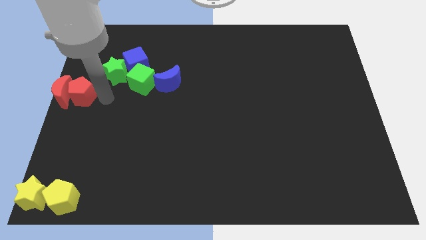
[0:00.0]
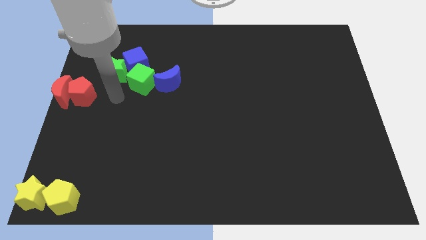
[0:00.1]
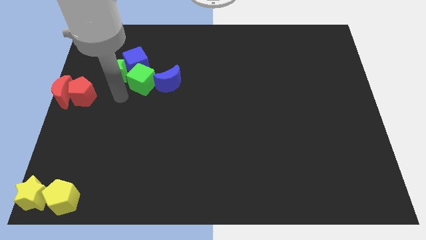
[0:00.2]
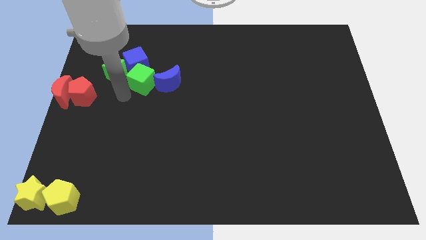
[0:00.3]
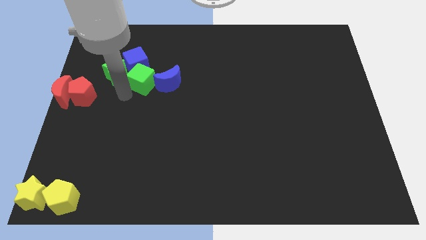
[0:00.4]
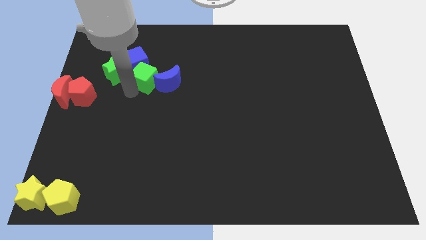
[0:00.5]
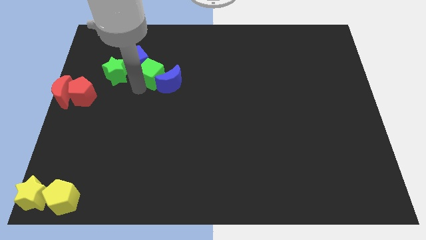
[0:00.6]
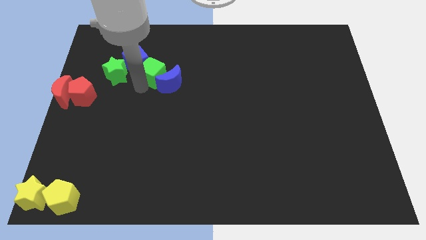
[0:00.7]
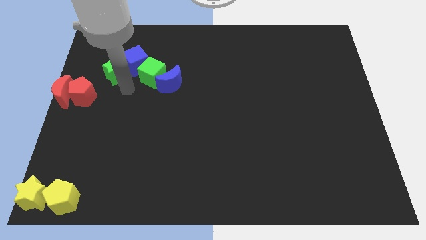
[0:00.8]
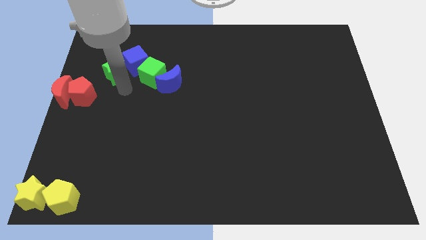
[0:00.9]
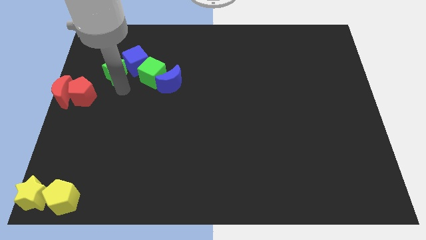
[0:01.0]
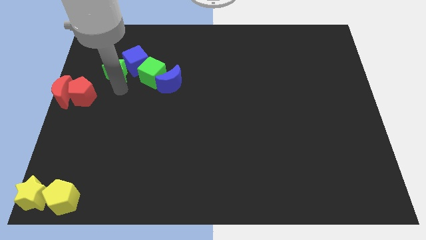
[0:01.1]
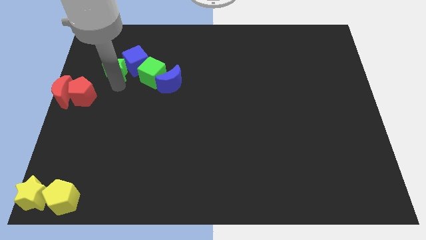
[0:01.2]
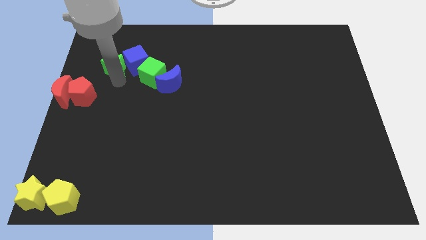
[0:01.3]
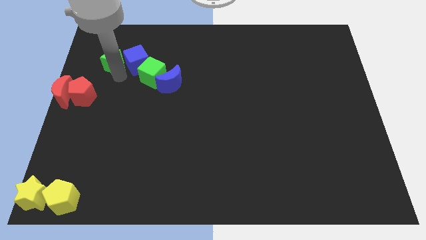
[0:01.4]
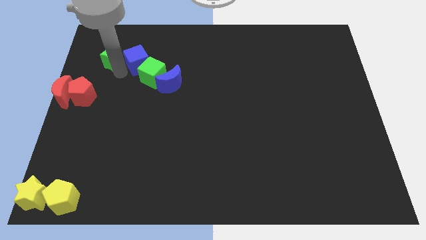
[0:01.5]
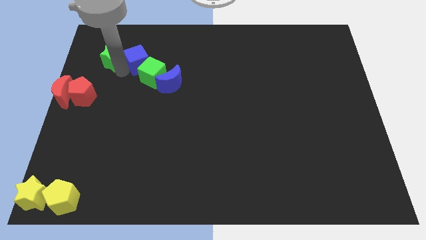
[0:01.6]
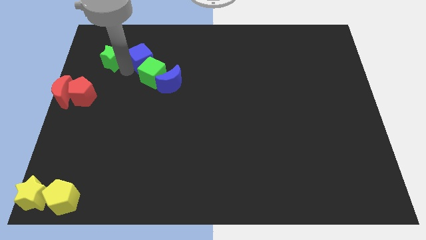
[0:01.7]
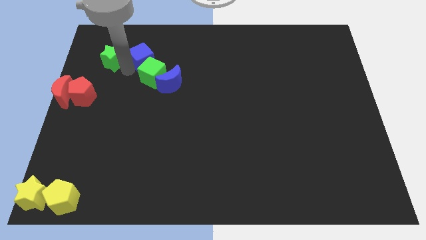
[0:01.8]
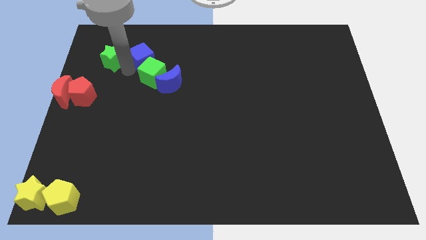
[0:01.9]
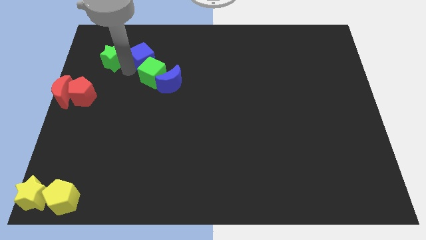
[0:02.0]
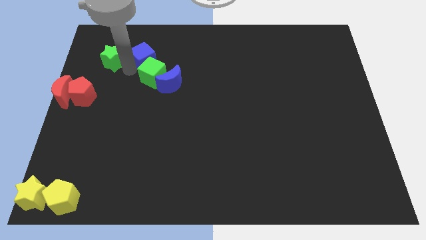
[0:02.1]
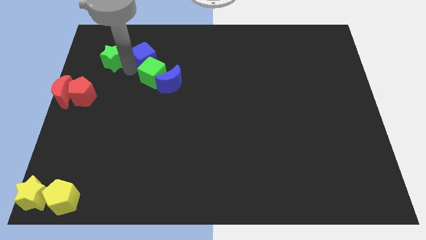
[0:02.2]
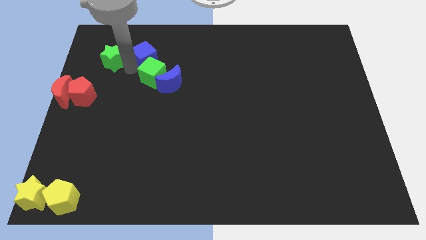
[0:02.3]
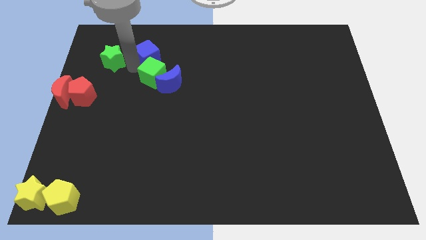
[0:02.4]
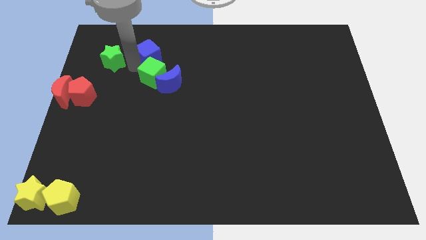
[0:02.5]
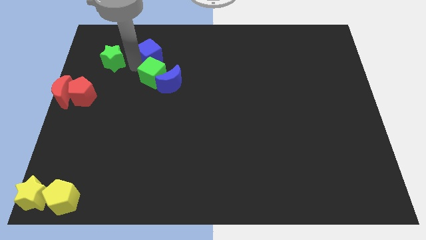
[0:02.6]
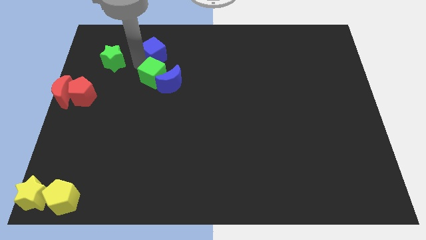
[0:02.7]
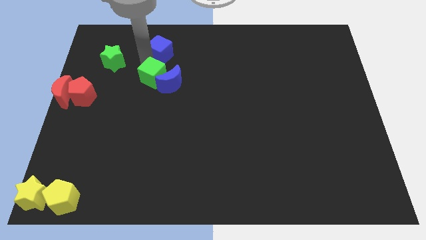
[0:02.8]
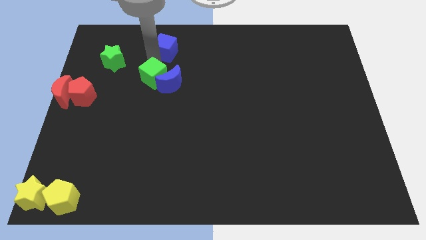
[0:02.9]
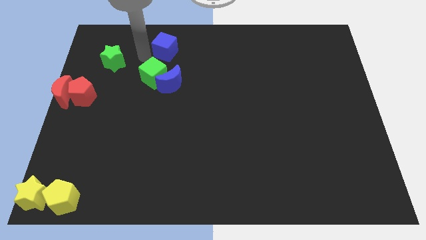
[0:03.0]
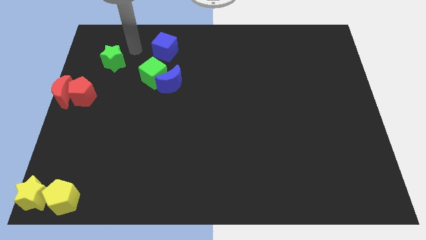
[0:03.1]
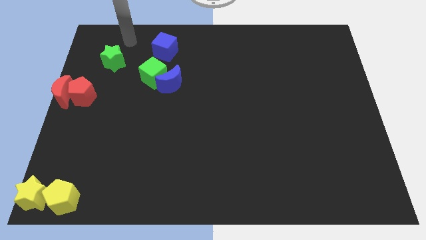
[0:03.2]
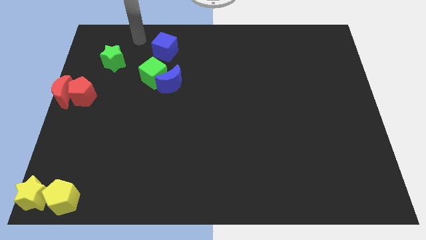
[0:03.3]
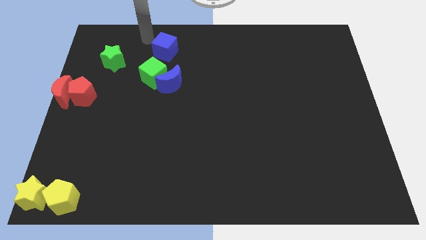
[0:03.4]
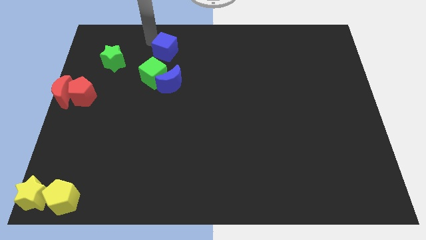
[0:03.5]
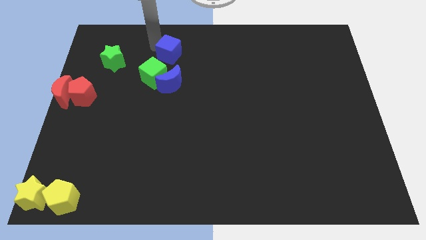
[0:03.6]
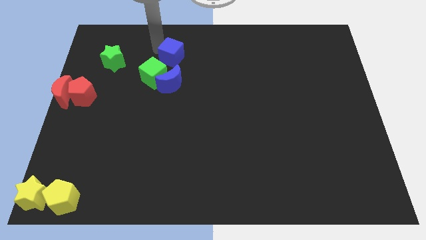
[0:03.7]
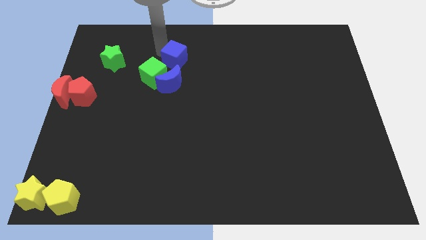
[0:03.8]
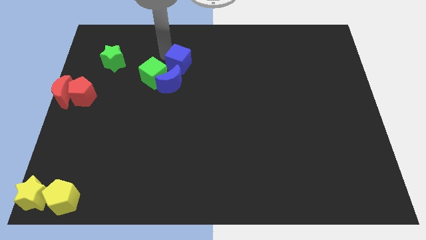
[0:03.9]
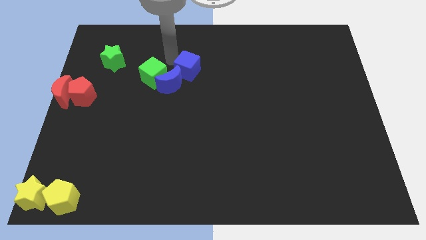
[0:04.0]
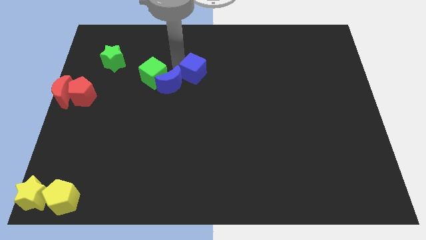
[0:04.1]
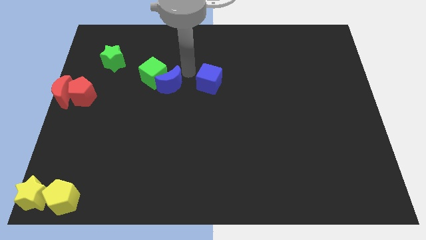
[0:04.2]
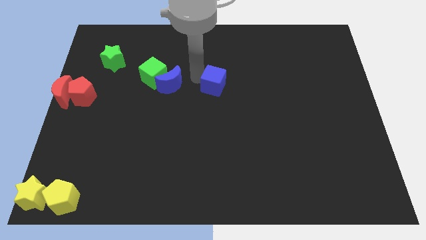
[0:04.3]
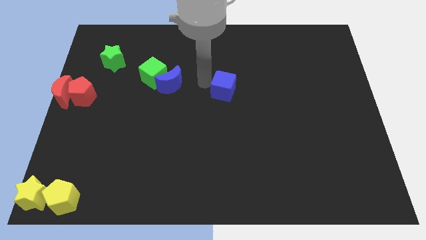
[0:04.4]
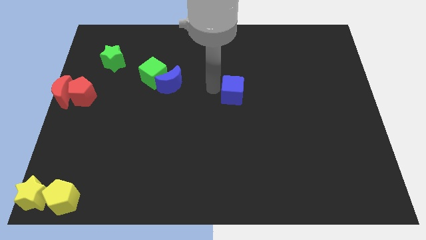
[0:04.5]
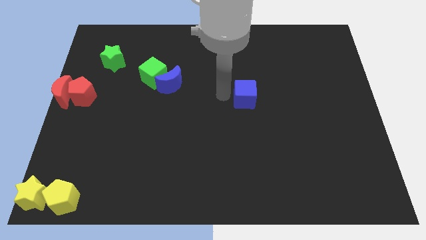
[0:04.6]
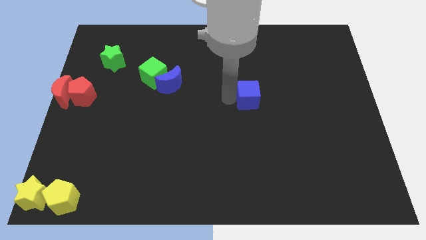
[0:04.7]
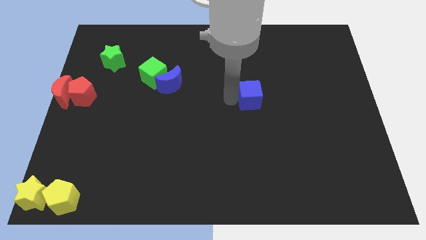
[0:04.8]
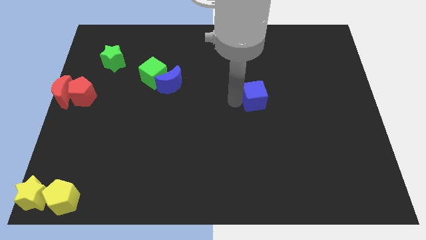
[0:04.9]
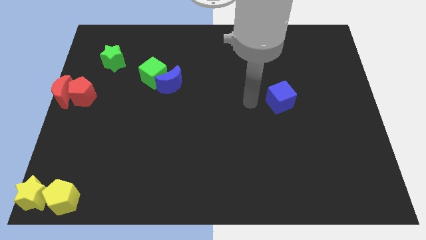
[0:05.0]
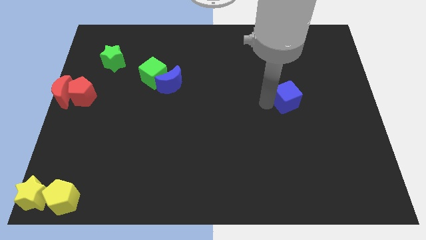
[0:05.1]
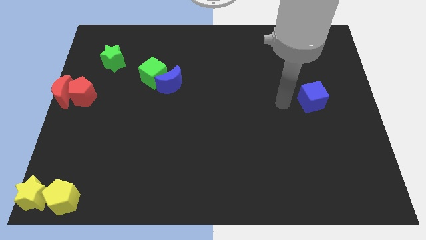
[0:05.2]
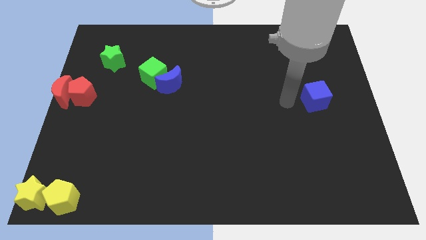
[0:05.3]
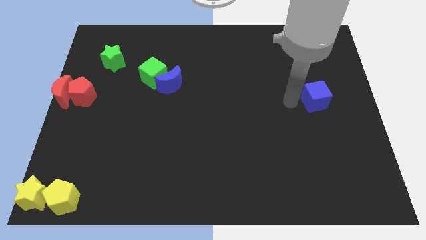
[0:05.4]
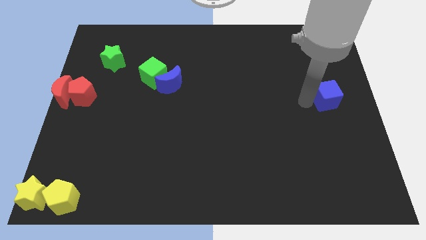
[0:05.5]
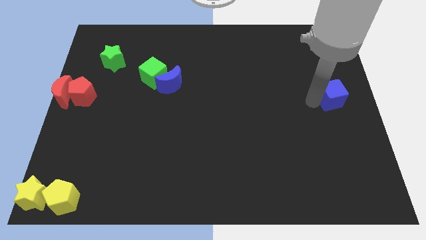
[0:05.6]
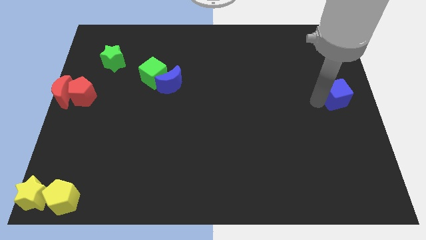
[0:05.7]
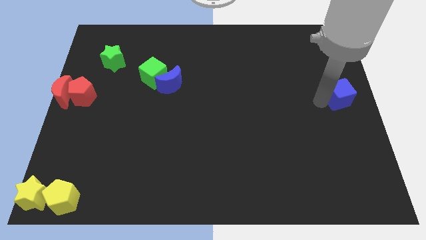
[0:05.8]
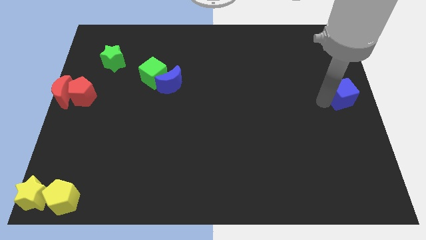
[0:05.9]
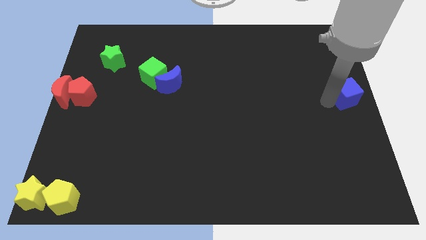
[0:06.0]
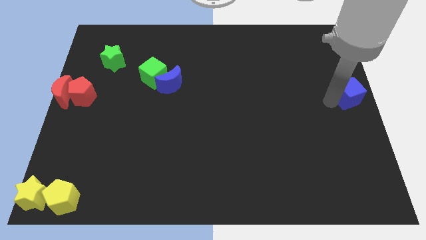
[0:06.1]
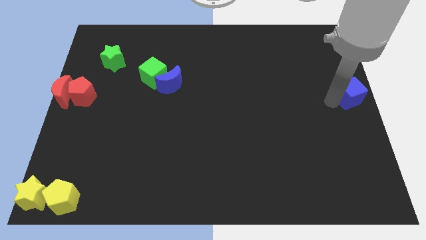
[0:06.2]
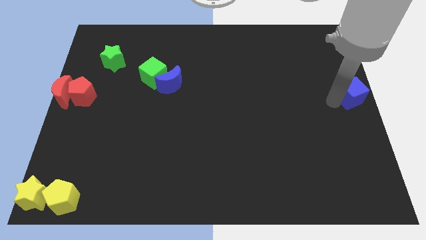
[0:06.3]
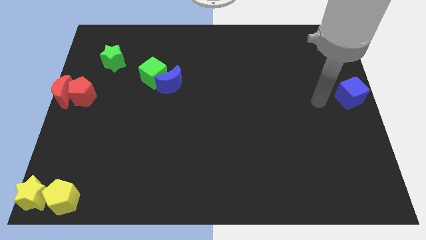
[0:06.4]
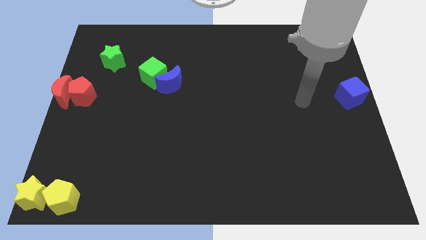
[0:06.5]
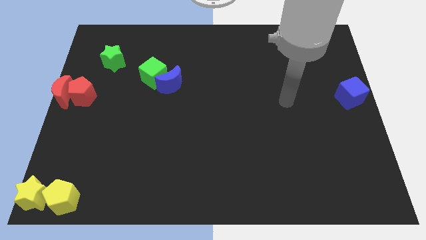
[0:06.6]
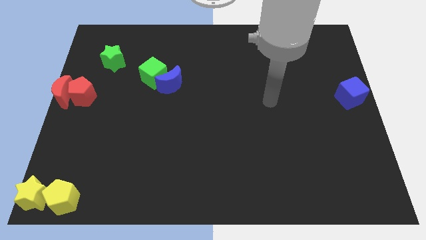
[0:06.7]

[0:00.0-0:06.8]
place the blue cube at the center right side of the board

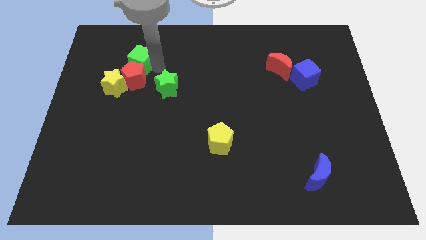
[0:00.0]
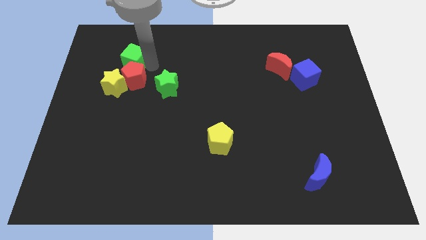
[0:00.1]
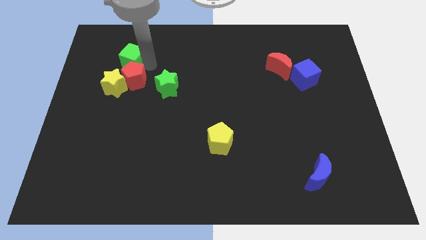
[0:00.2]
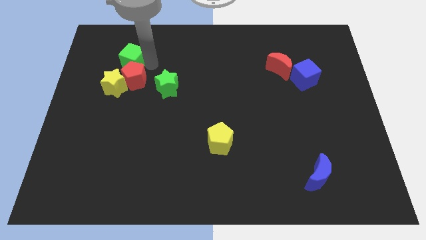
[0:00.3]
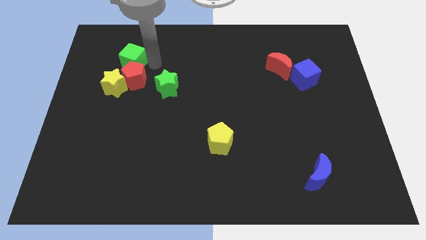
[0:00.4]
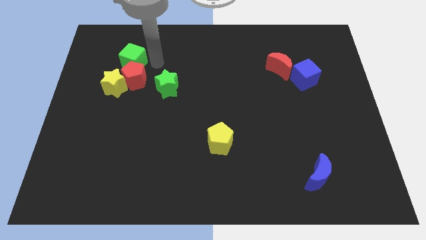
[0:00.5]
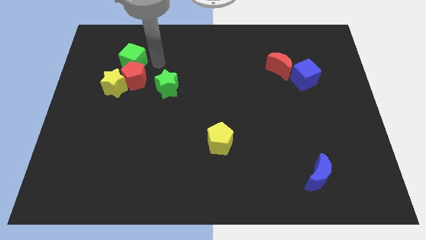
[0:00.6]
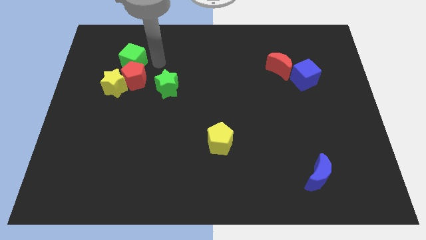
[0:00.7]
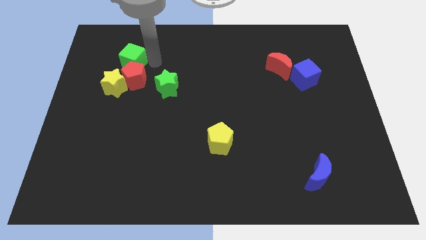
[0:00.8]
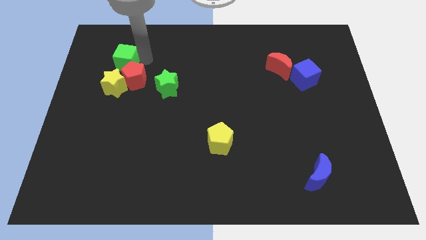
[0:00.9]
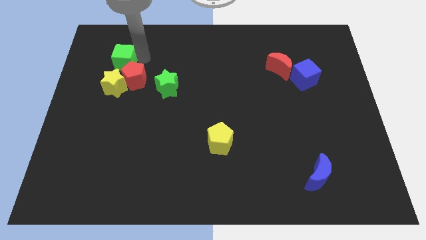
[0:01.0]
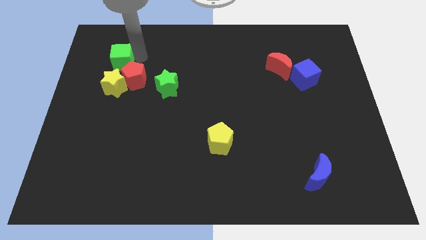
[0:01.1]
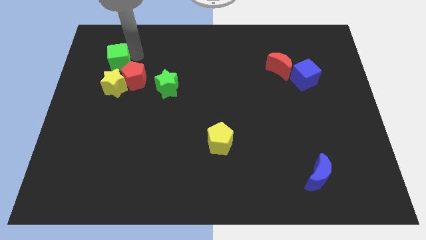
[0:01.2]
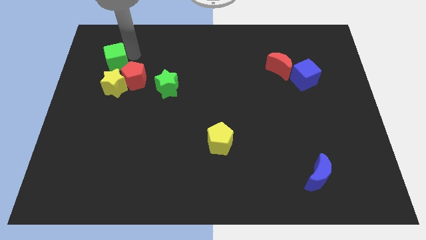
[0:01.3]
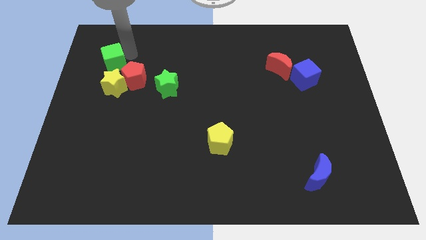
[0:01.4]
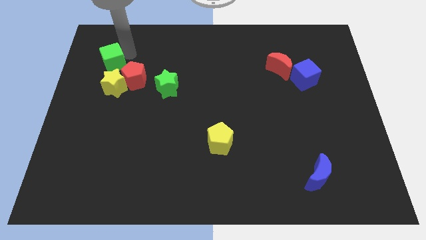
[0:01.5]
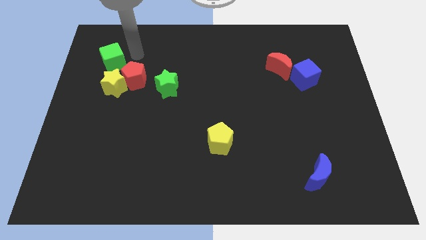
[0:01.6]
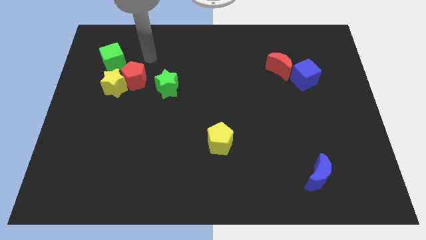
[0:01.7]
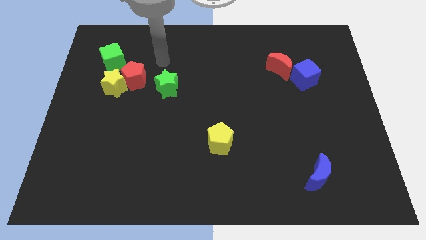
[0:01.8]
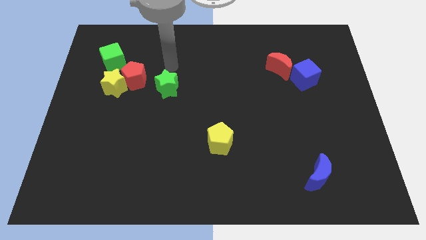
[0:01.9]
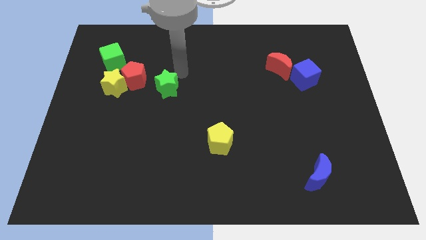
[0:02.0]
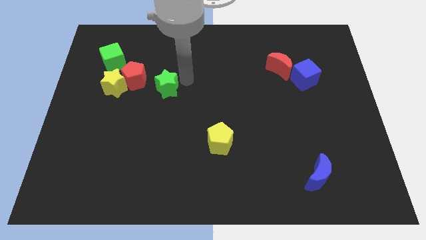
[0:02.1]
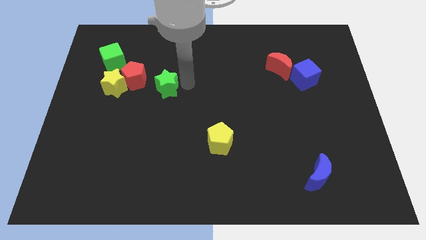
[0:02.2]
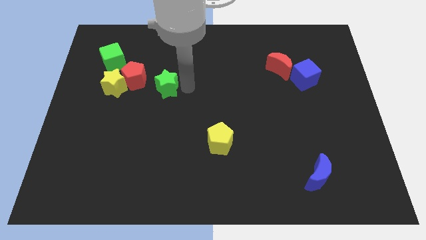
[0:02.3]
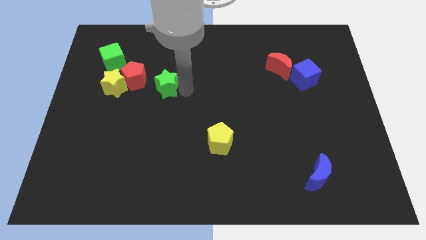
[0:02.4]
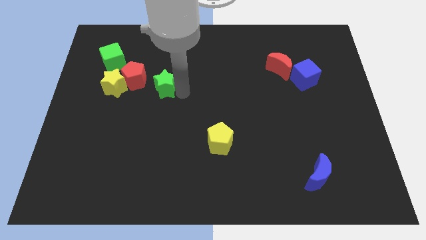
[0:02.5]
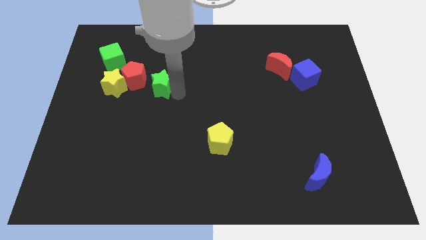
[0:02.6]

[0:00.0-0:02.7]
move the green cube above the yellow star
